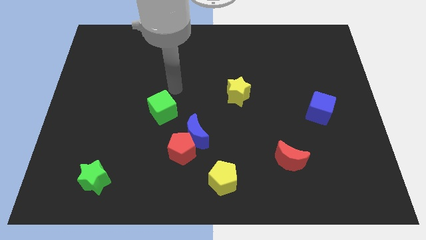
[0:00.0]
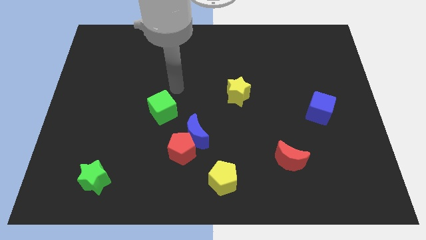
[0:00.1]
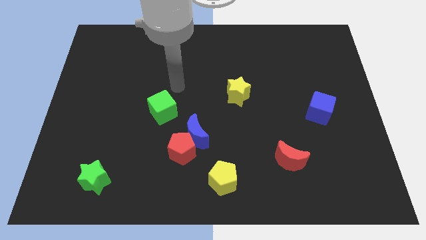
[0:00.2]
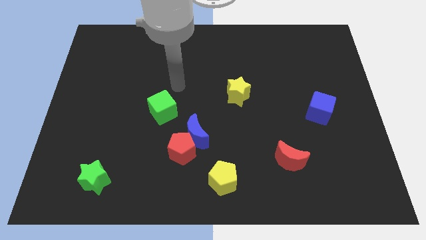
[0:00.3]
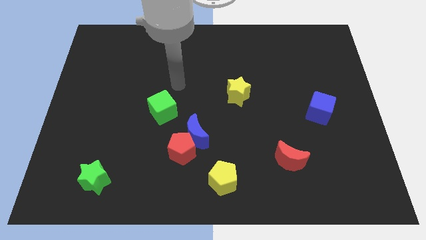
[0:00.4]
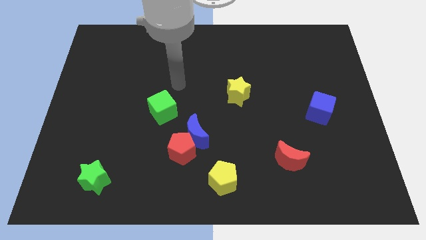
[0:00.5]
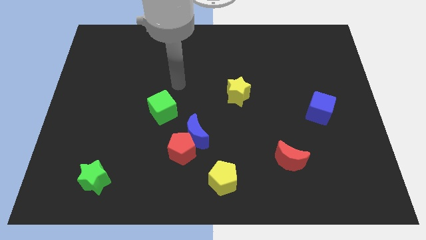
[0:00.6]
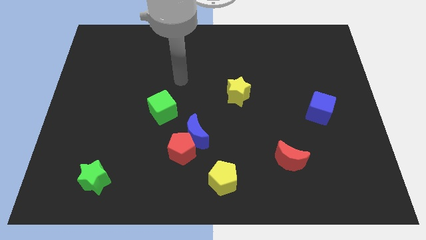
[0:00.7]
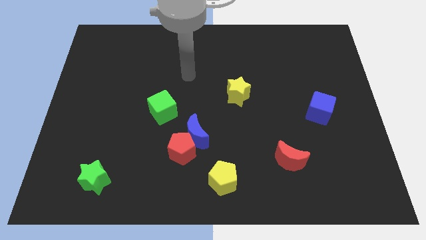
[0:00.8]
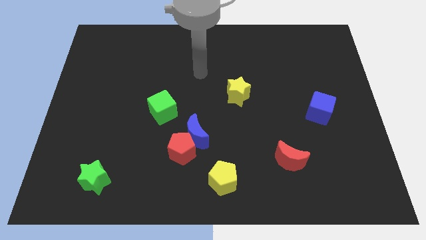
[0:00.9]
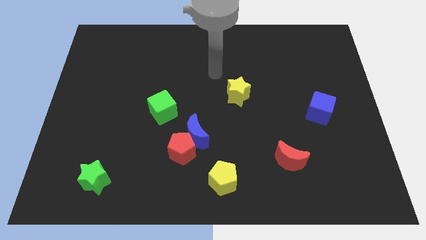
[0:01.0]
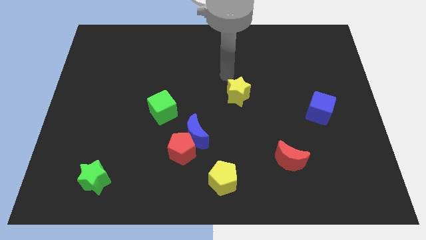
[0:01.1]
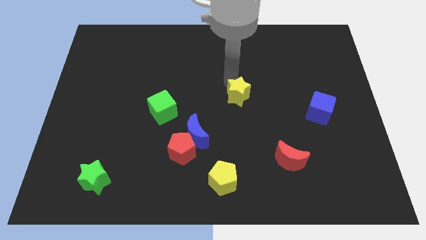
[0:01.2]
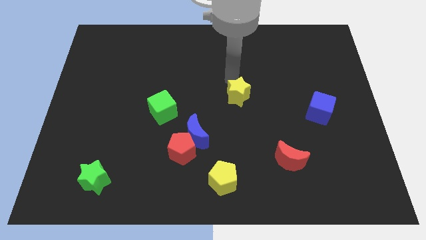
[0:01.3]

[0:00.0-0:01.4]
move the arm to the top of yellow star

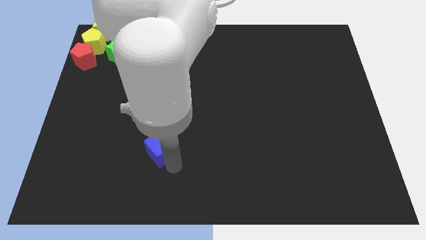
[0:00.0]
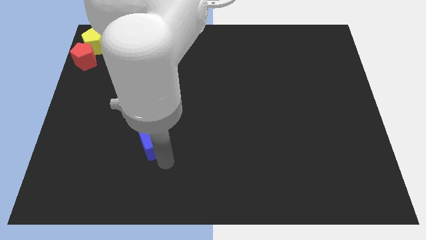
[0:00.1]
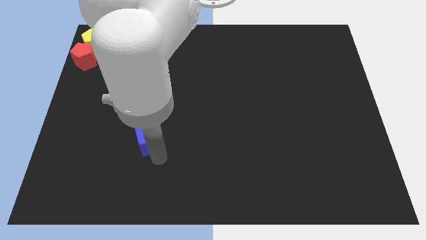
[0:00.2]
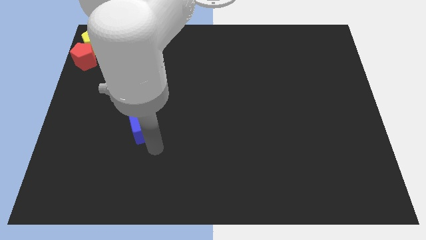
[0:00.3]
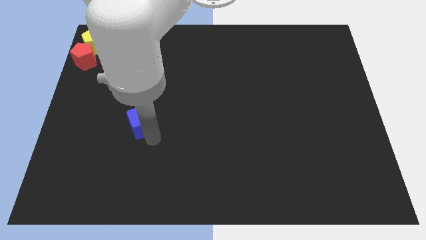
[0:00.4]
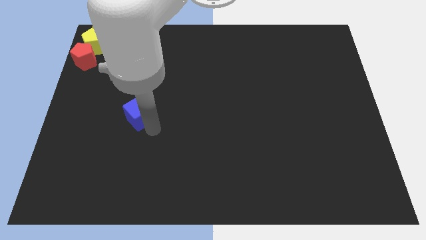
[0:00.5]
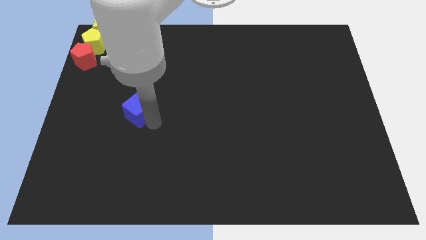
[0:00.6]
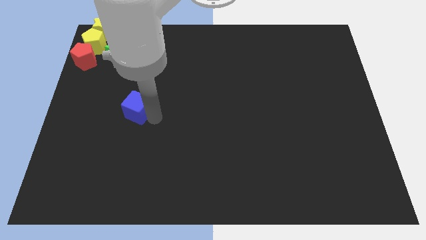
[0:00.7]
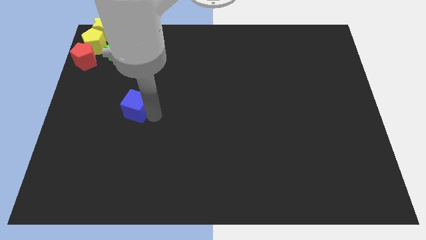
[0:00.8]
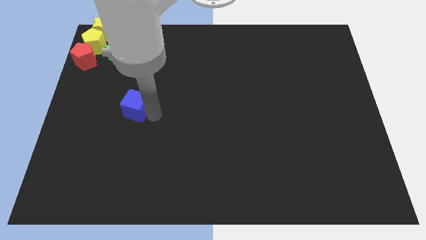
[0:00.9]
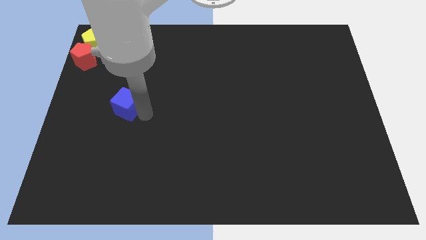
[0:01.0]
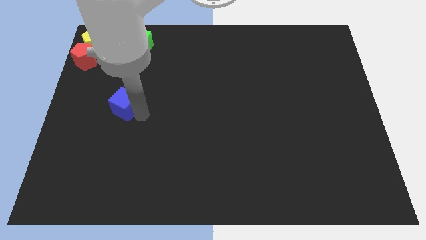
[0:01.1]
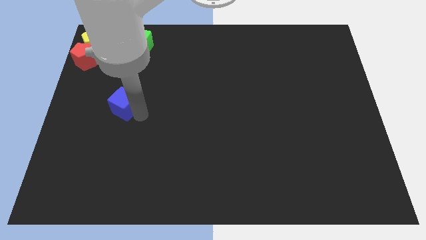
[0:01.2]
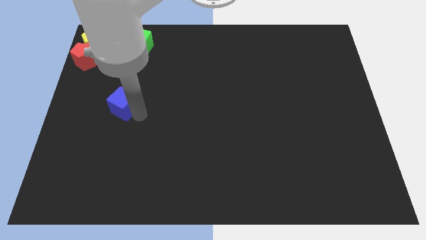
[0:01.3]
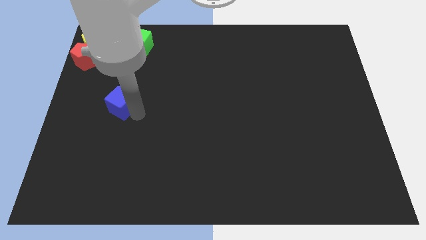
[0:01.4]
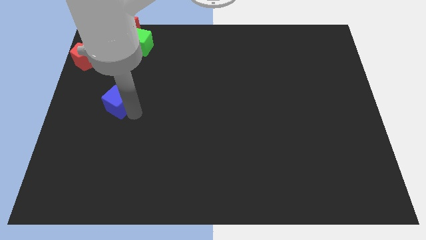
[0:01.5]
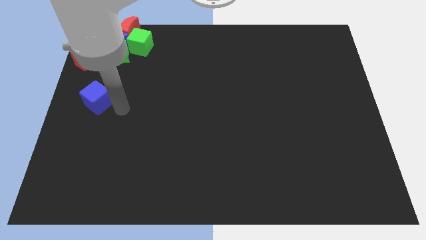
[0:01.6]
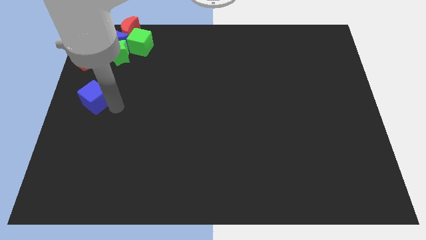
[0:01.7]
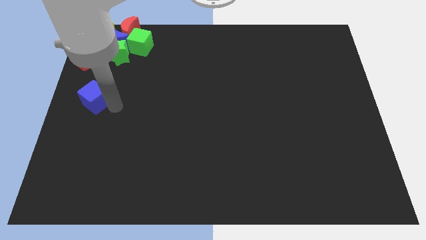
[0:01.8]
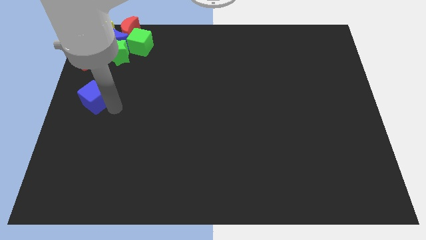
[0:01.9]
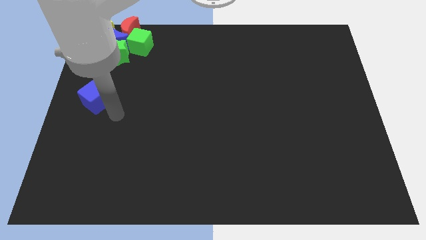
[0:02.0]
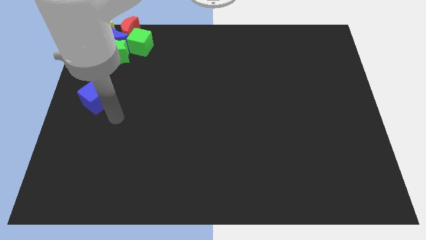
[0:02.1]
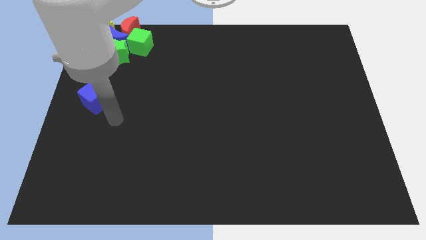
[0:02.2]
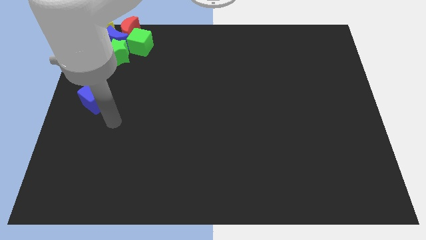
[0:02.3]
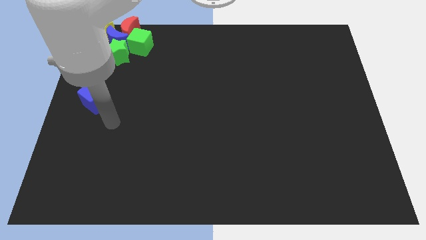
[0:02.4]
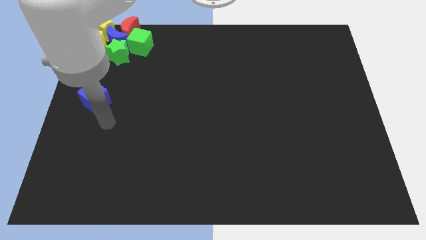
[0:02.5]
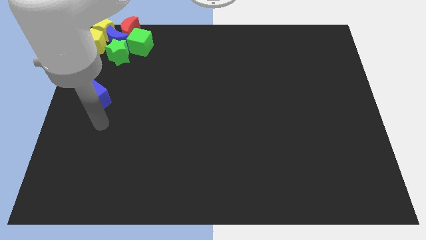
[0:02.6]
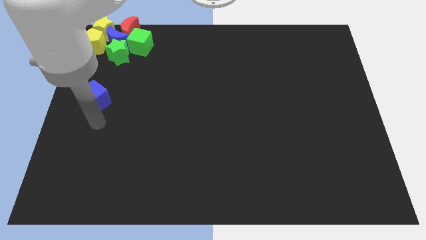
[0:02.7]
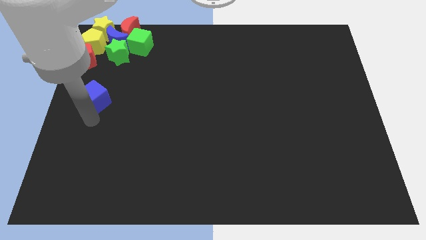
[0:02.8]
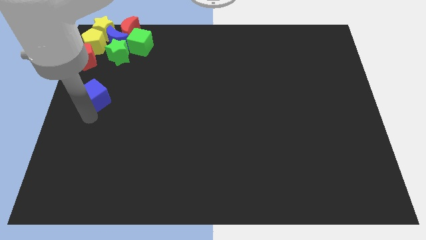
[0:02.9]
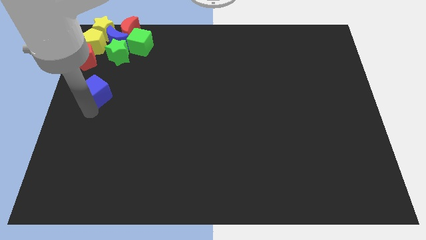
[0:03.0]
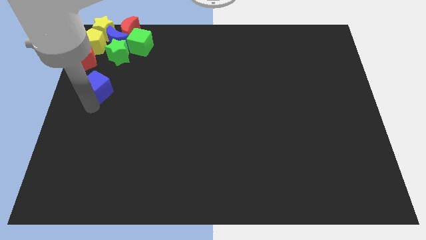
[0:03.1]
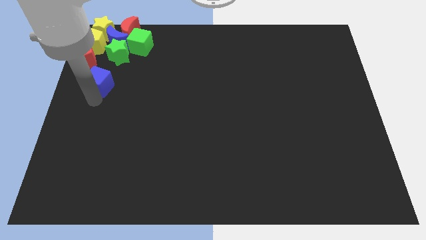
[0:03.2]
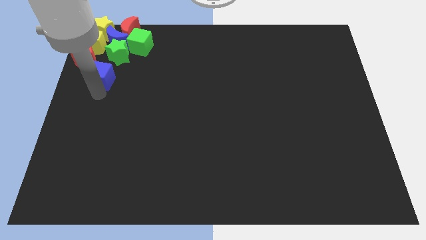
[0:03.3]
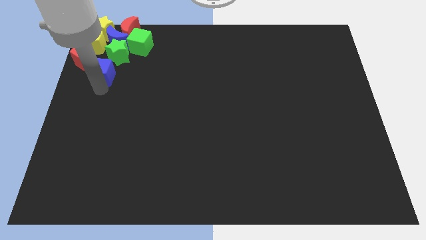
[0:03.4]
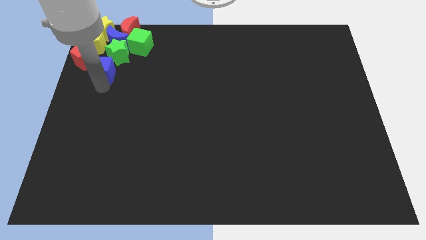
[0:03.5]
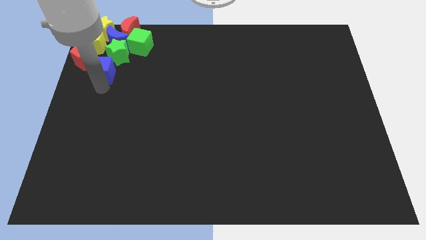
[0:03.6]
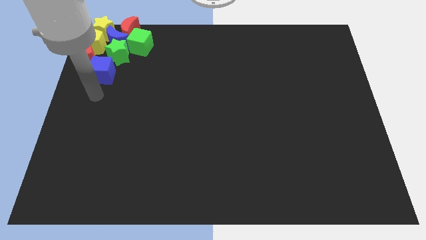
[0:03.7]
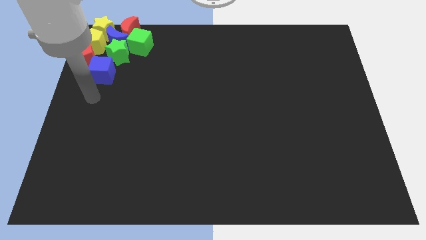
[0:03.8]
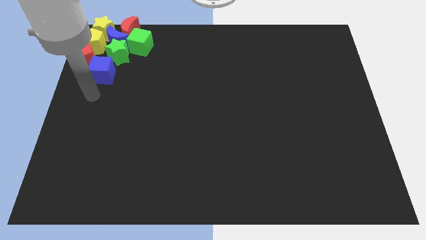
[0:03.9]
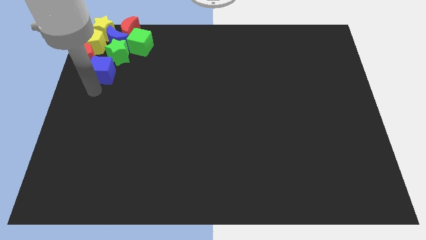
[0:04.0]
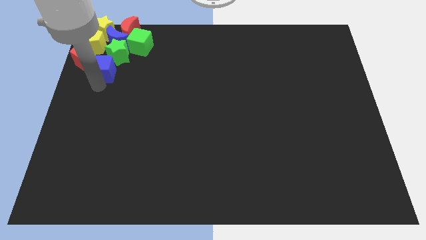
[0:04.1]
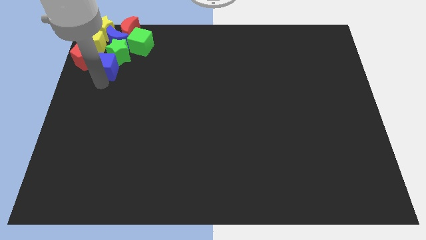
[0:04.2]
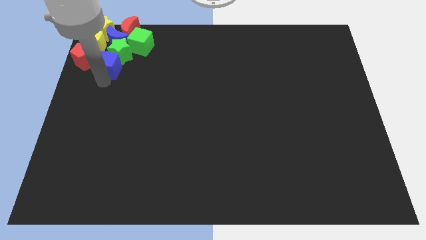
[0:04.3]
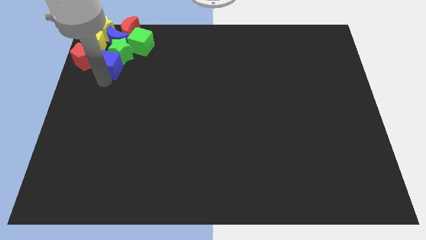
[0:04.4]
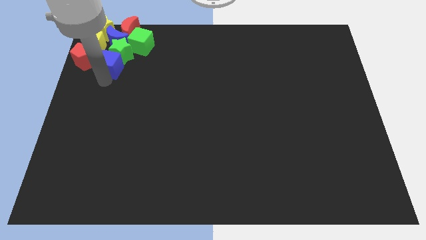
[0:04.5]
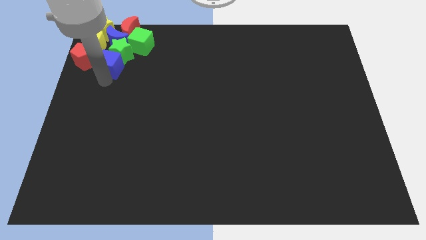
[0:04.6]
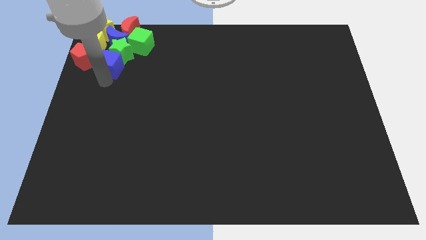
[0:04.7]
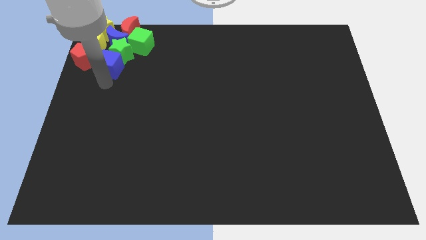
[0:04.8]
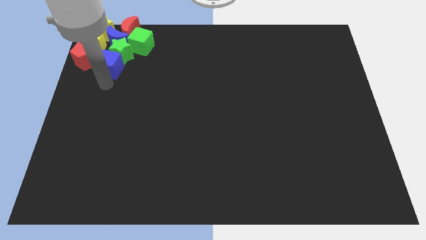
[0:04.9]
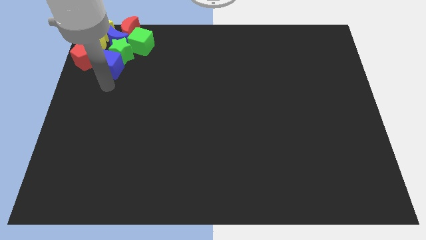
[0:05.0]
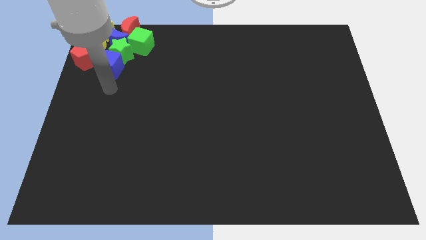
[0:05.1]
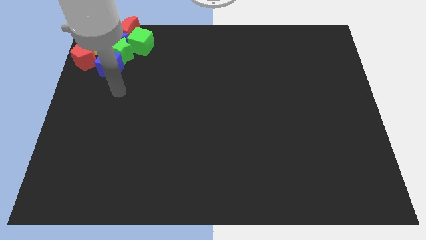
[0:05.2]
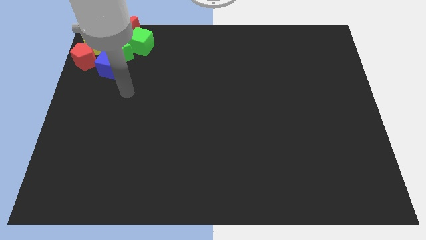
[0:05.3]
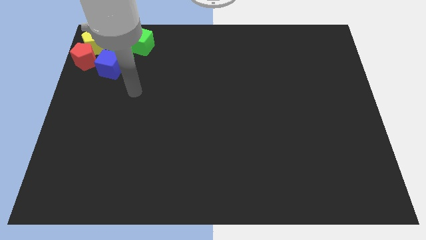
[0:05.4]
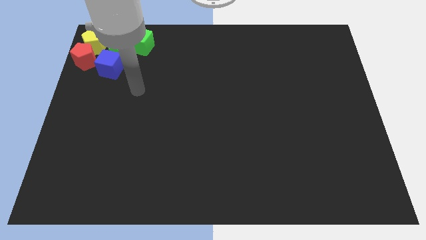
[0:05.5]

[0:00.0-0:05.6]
push the blue cube into the group of blocks

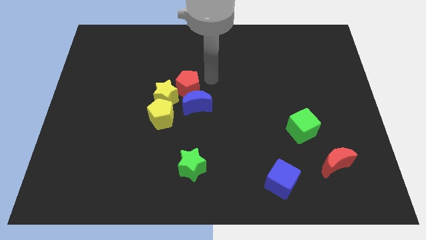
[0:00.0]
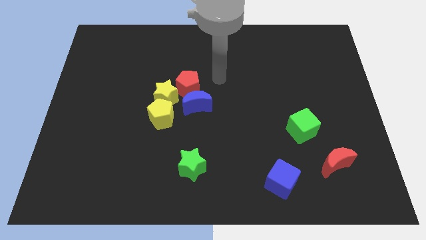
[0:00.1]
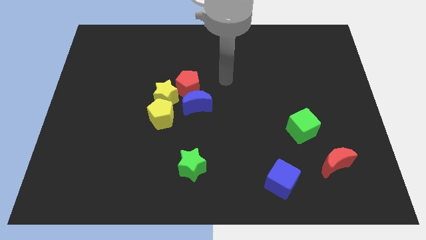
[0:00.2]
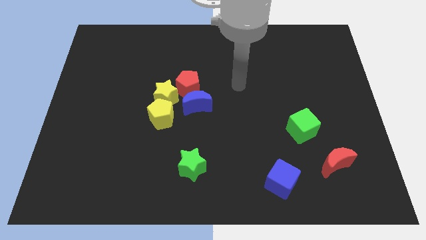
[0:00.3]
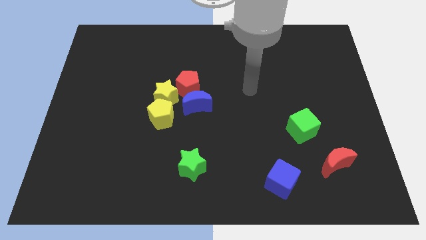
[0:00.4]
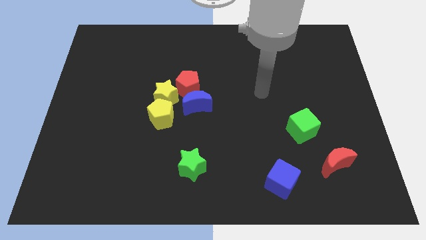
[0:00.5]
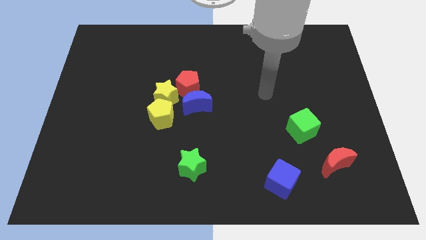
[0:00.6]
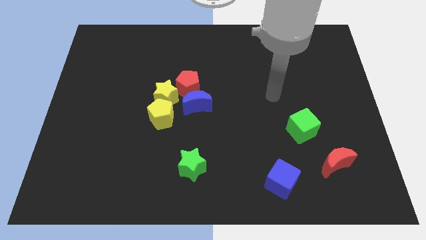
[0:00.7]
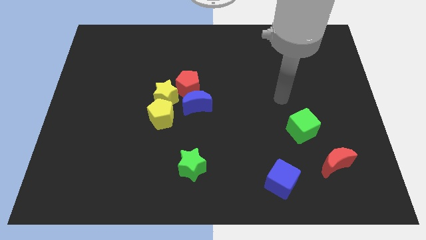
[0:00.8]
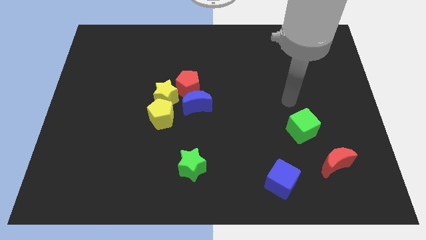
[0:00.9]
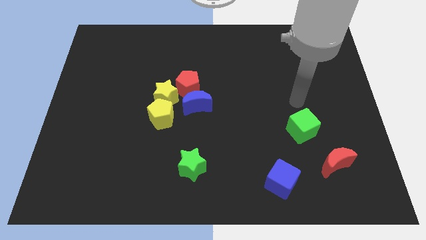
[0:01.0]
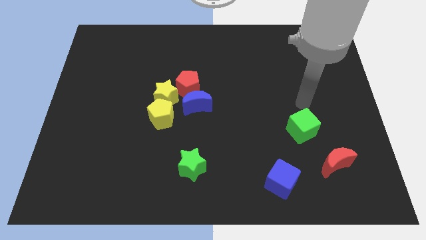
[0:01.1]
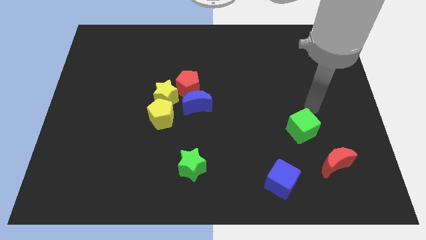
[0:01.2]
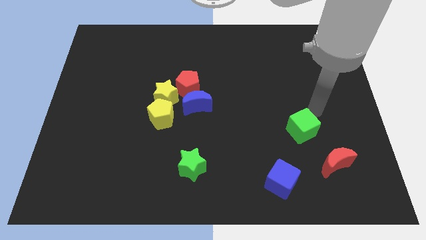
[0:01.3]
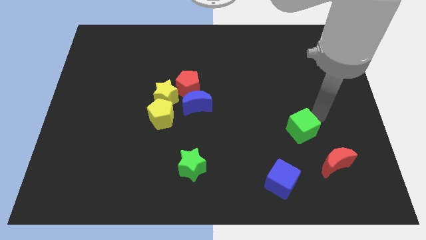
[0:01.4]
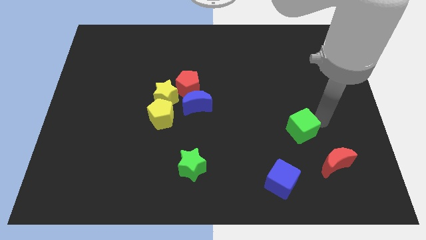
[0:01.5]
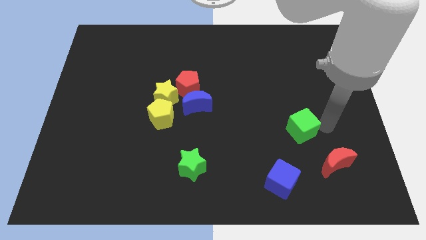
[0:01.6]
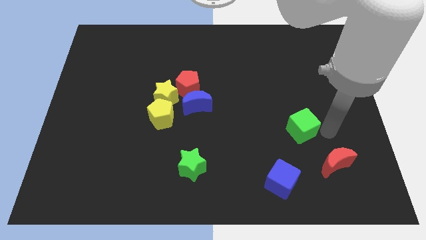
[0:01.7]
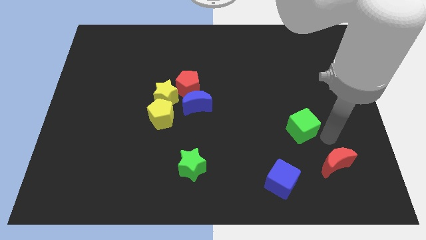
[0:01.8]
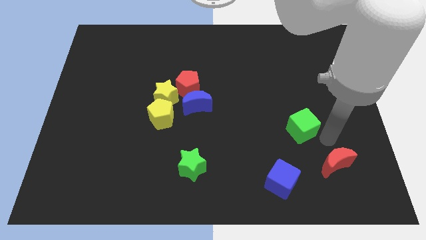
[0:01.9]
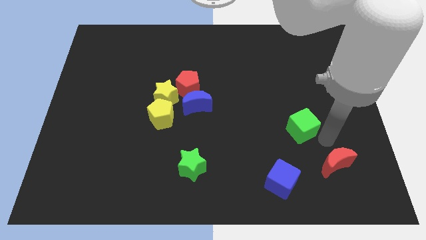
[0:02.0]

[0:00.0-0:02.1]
move your arm towards green cube
